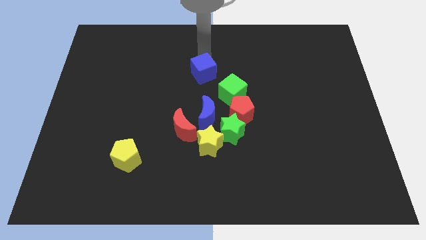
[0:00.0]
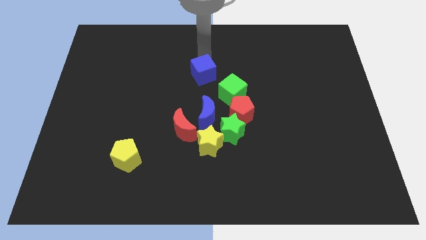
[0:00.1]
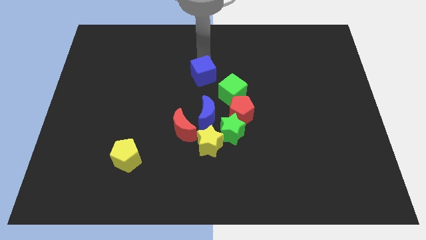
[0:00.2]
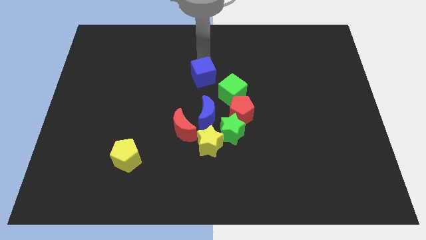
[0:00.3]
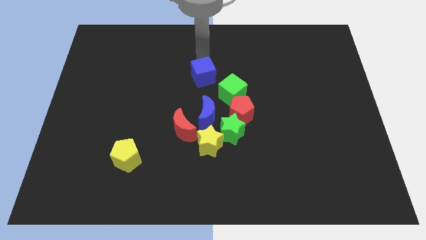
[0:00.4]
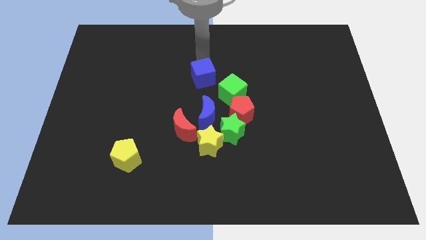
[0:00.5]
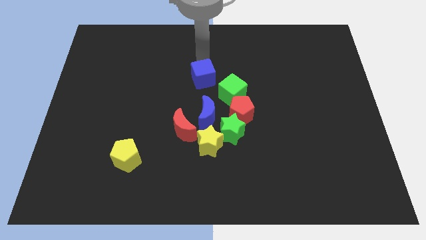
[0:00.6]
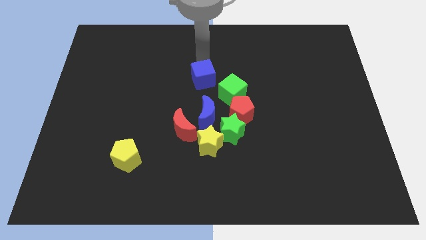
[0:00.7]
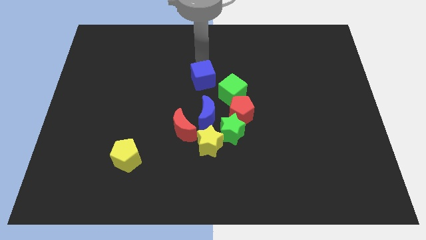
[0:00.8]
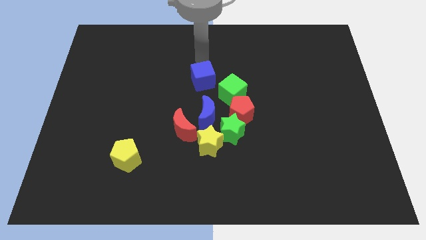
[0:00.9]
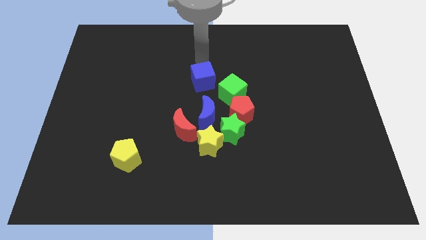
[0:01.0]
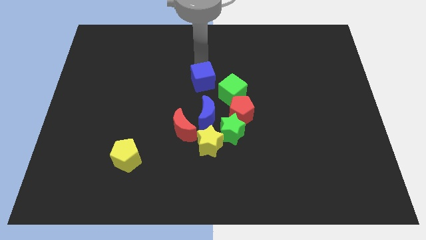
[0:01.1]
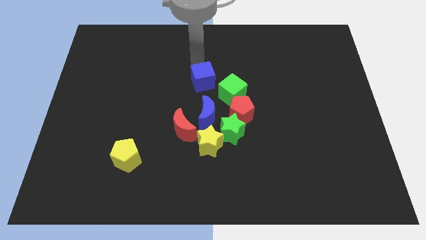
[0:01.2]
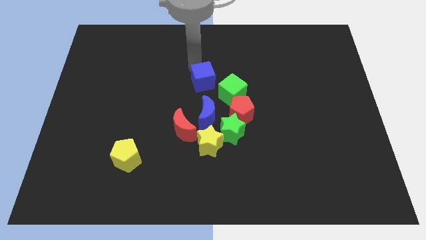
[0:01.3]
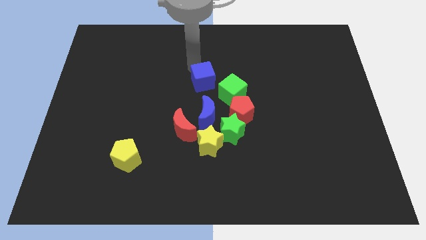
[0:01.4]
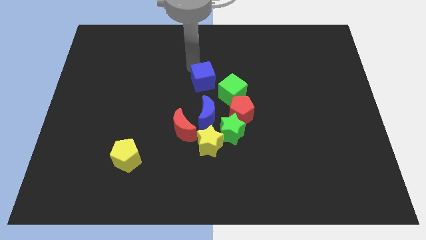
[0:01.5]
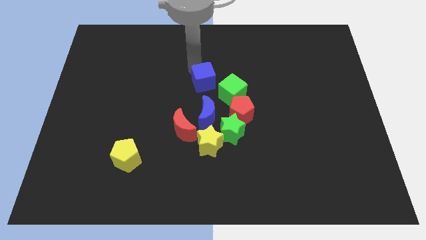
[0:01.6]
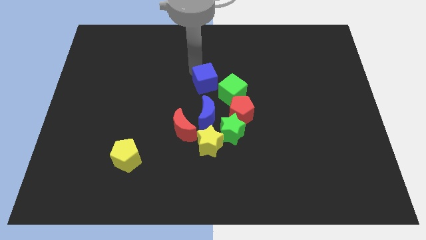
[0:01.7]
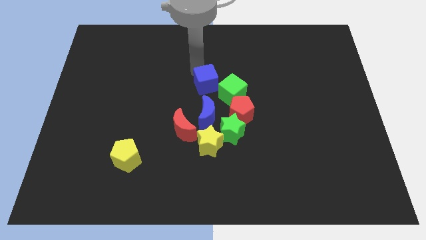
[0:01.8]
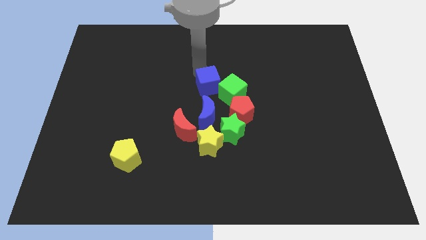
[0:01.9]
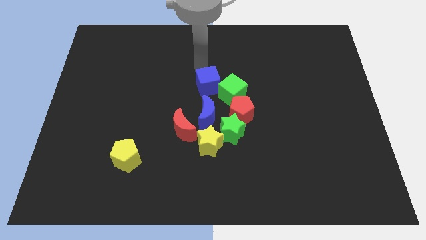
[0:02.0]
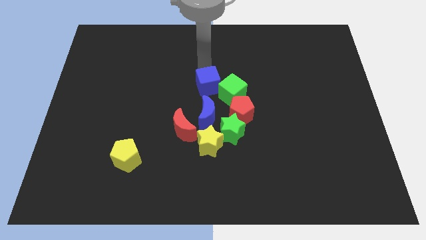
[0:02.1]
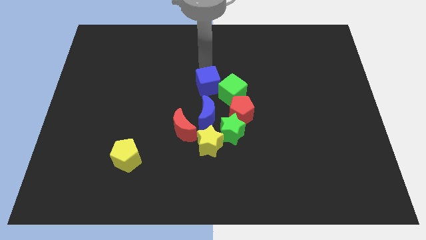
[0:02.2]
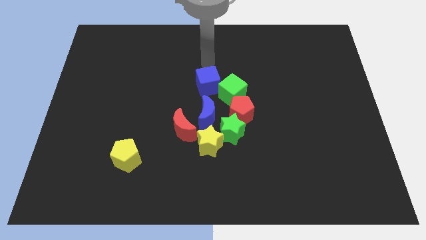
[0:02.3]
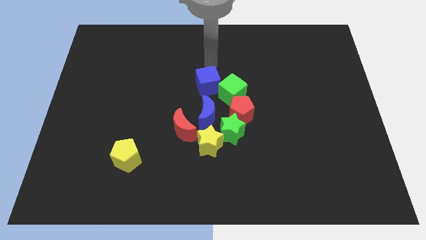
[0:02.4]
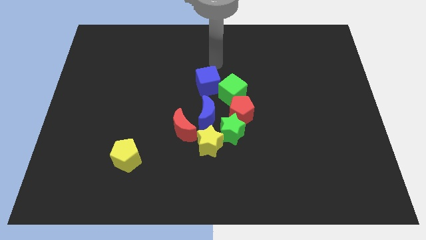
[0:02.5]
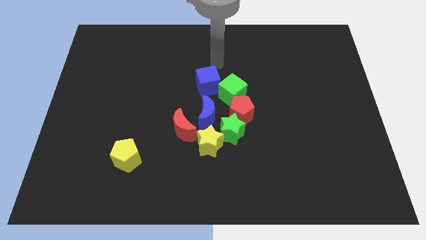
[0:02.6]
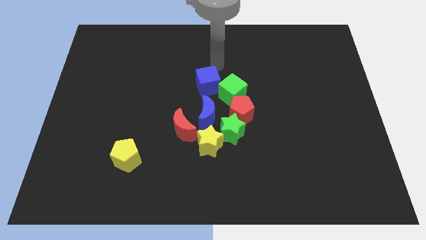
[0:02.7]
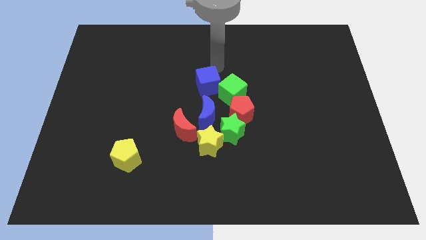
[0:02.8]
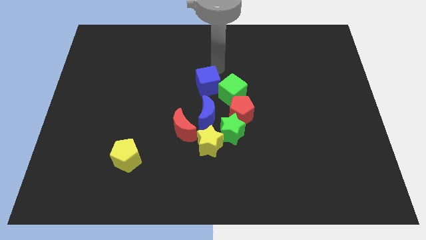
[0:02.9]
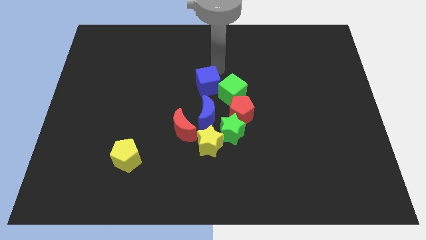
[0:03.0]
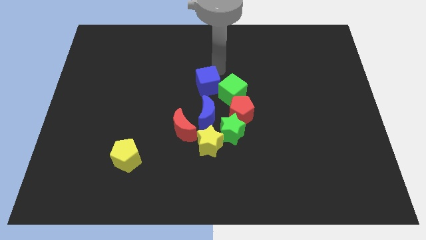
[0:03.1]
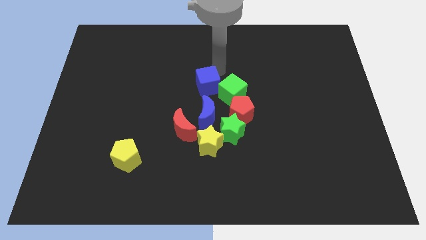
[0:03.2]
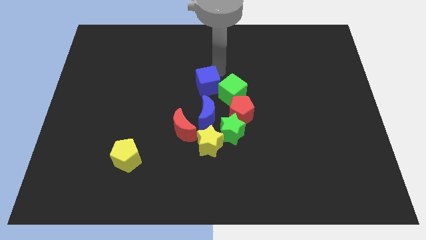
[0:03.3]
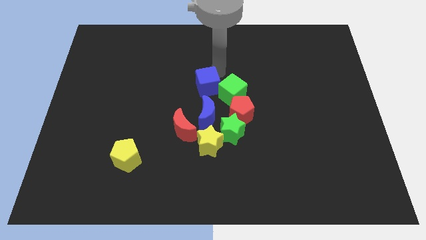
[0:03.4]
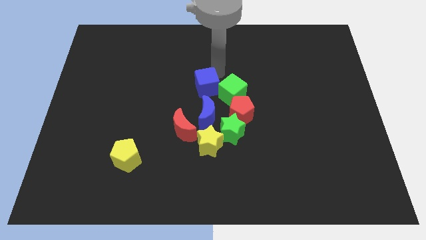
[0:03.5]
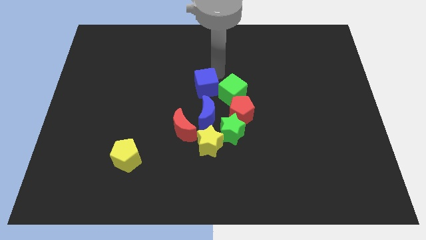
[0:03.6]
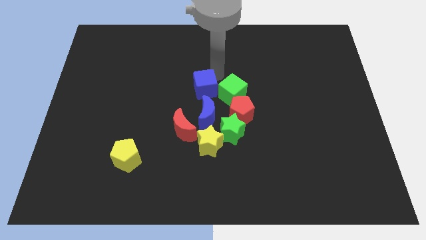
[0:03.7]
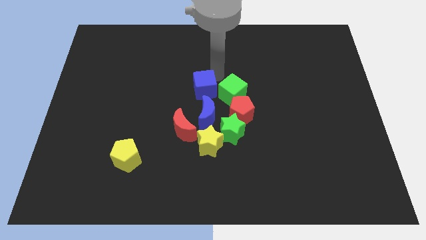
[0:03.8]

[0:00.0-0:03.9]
move the blue cube close to the green cube

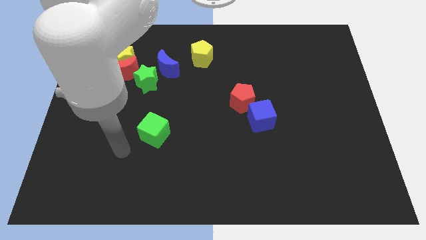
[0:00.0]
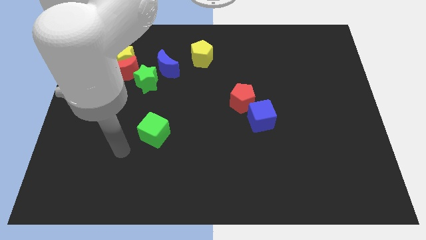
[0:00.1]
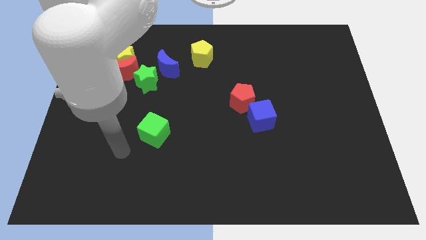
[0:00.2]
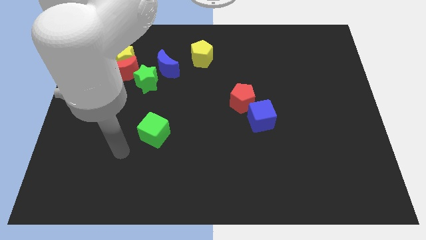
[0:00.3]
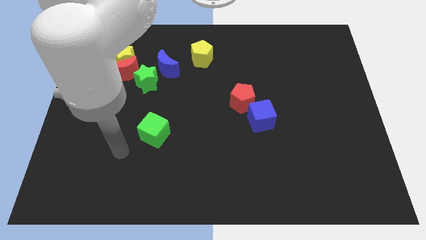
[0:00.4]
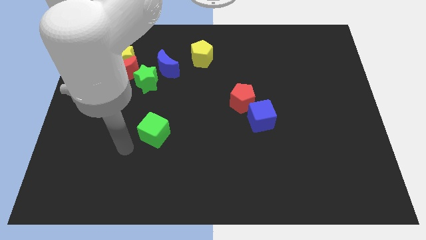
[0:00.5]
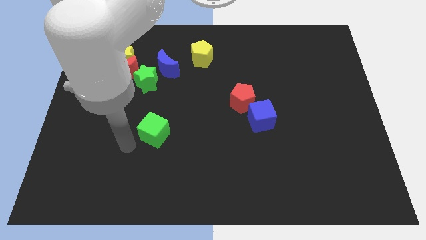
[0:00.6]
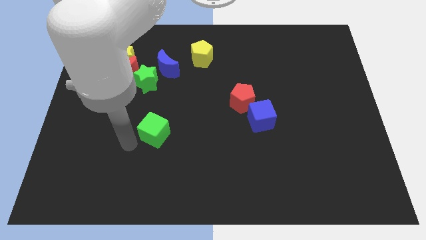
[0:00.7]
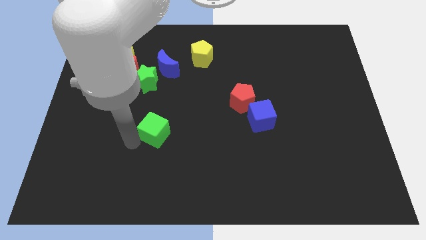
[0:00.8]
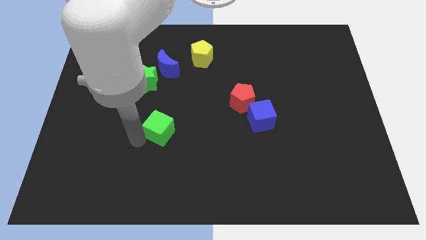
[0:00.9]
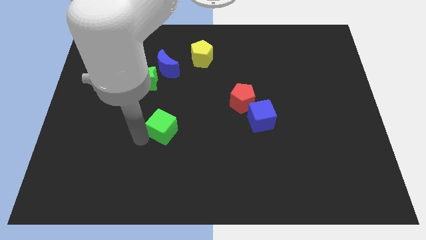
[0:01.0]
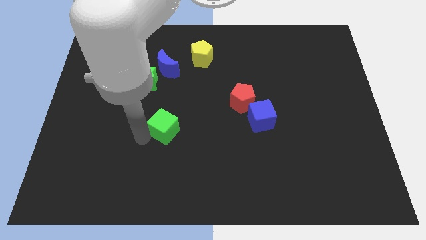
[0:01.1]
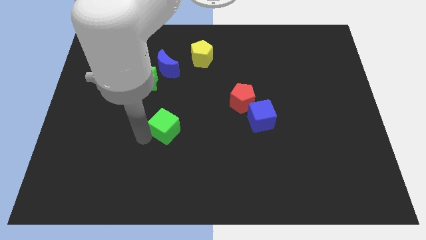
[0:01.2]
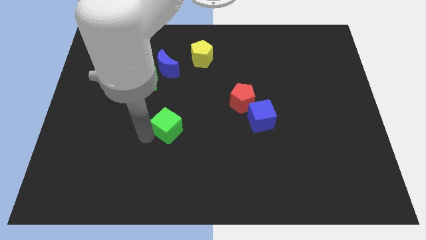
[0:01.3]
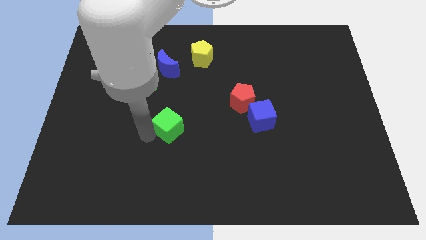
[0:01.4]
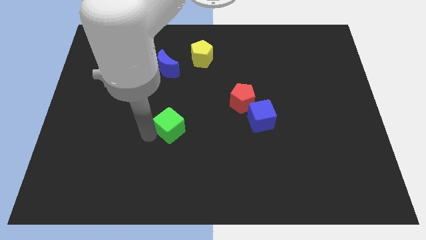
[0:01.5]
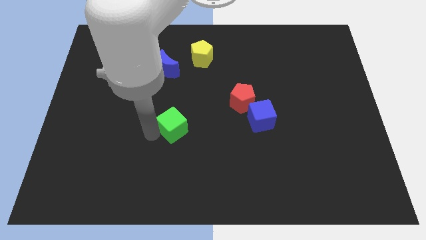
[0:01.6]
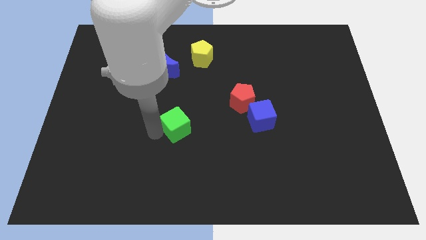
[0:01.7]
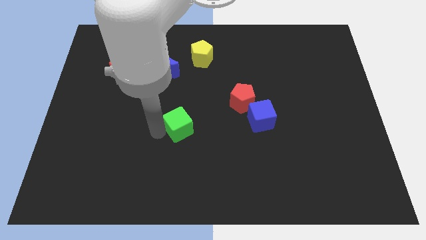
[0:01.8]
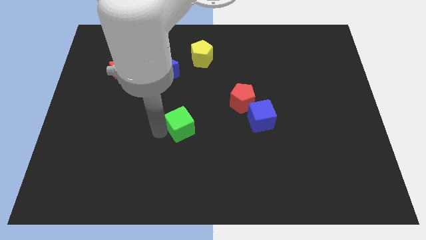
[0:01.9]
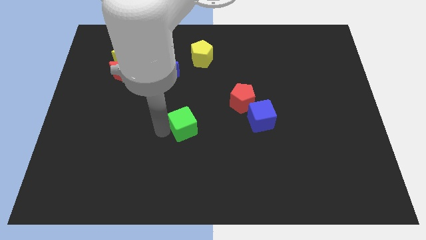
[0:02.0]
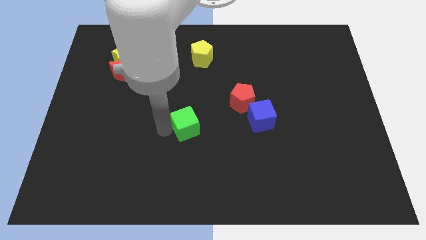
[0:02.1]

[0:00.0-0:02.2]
move the green cube to the center of the board

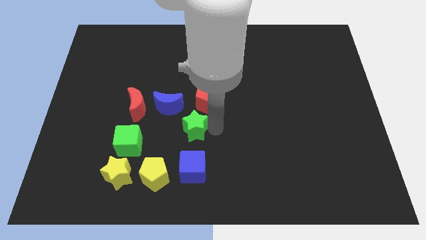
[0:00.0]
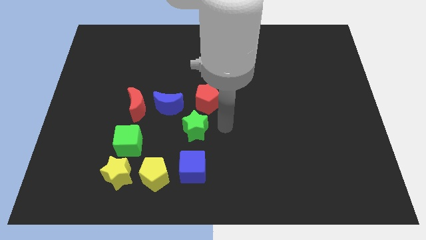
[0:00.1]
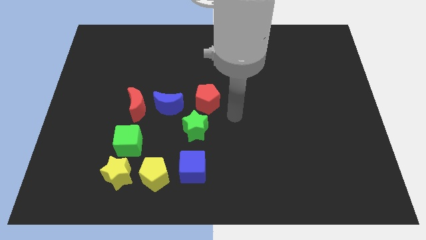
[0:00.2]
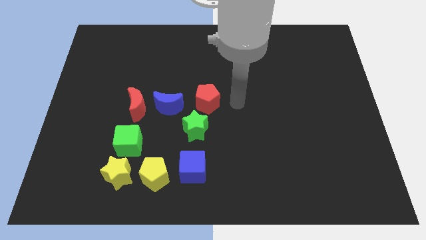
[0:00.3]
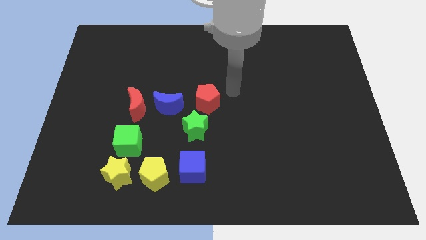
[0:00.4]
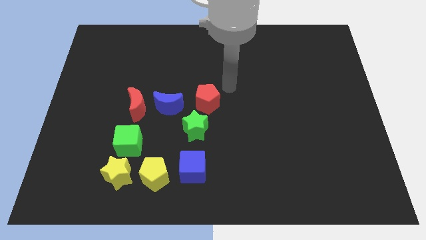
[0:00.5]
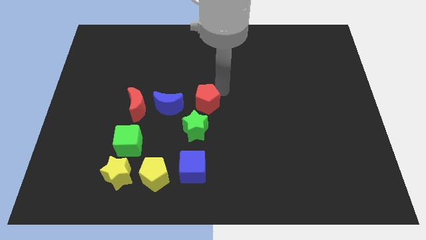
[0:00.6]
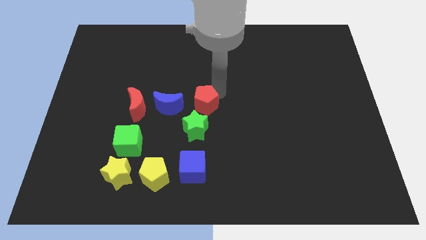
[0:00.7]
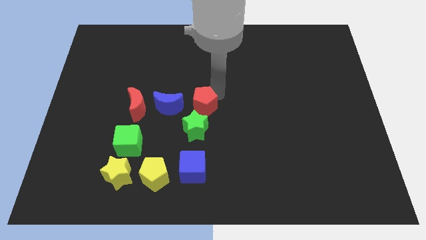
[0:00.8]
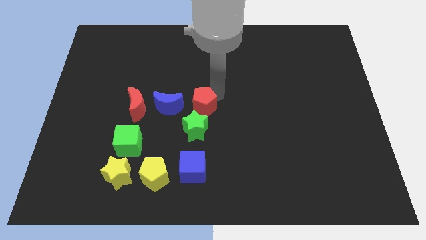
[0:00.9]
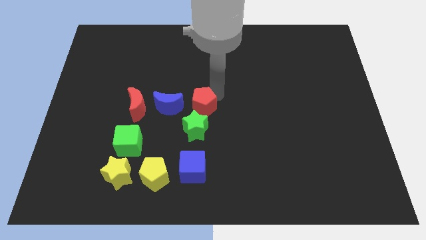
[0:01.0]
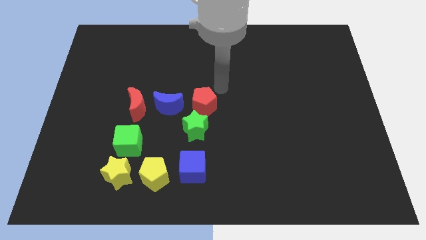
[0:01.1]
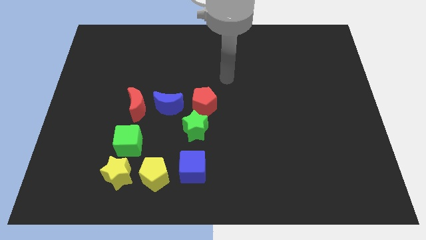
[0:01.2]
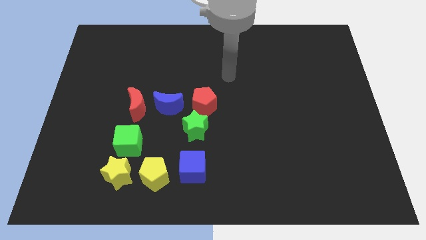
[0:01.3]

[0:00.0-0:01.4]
move the red pentagon slightly to the bottom

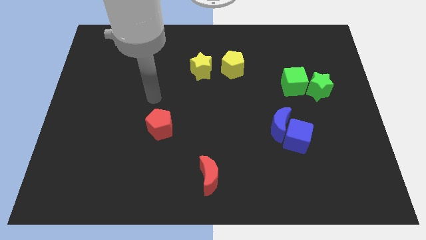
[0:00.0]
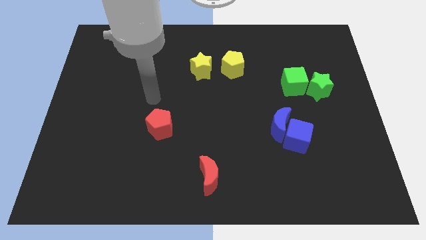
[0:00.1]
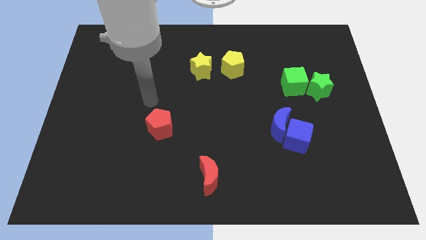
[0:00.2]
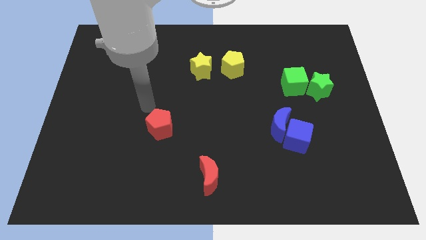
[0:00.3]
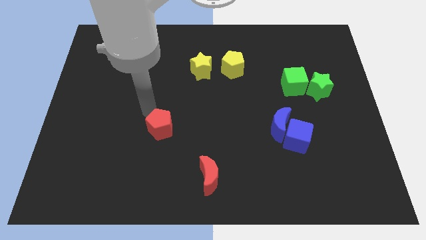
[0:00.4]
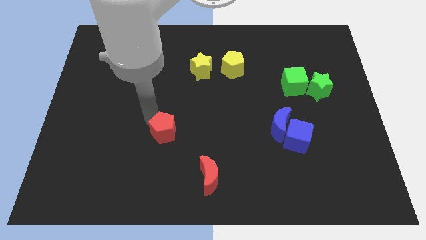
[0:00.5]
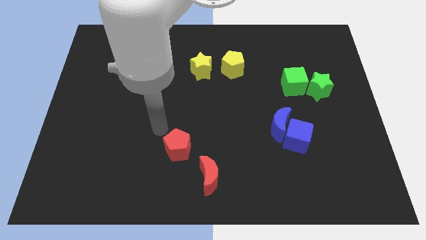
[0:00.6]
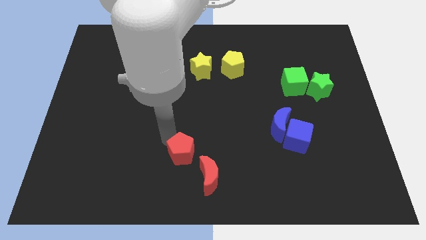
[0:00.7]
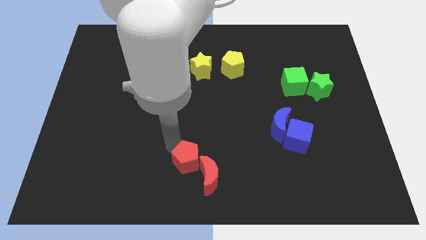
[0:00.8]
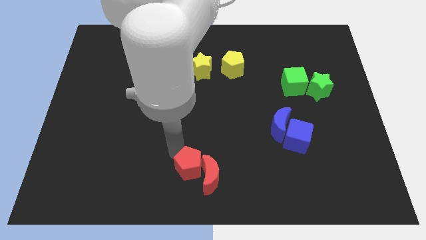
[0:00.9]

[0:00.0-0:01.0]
place red pentagon to the left of red moon

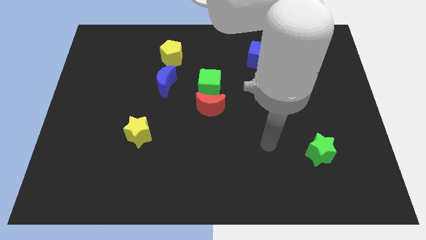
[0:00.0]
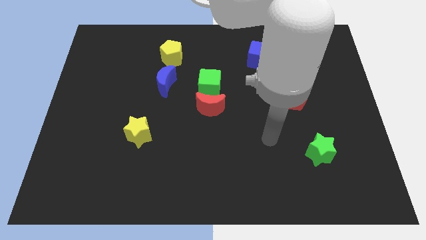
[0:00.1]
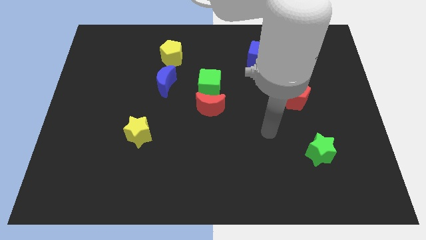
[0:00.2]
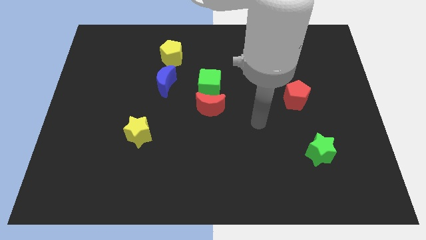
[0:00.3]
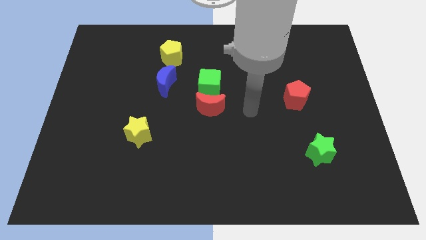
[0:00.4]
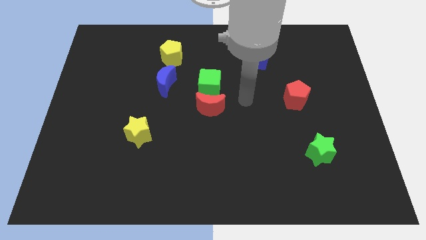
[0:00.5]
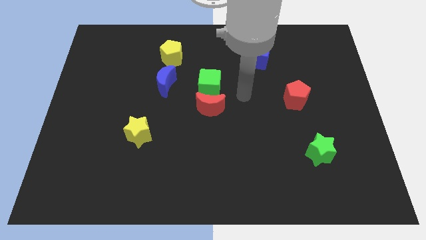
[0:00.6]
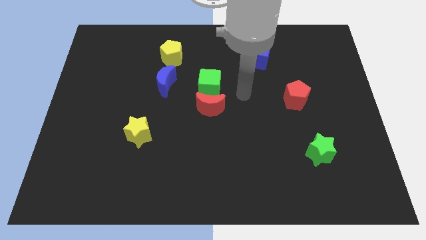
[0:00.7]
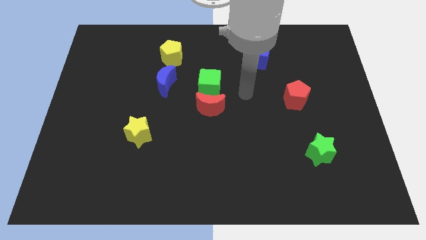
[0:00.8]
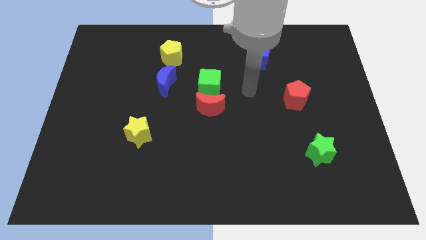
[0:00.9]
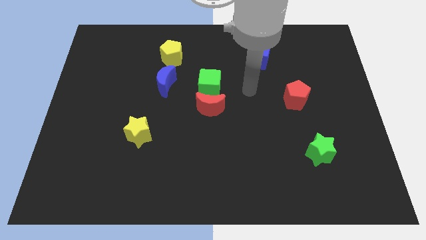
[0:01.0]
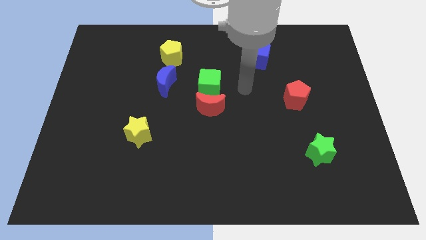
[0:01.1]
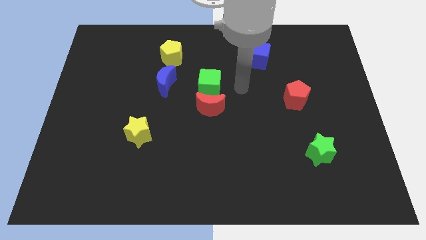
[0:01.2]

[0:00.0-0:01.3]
point your arm right to green cube
